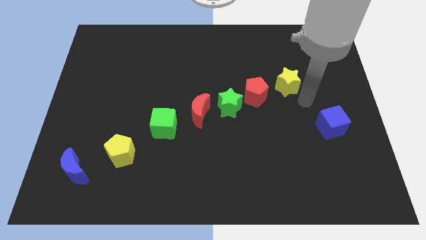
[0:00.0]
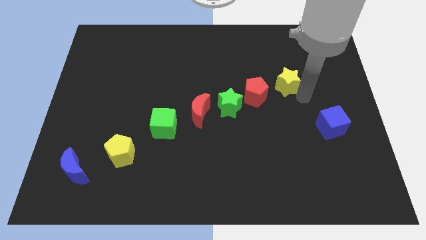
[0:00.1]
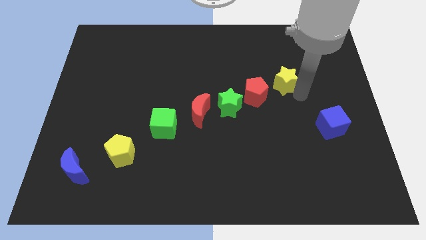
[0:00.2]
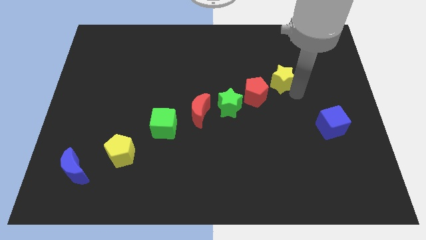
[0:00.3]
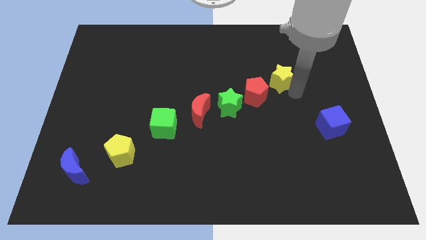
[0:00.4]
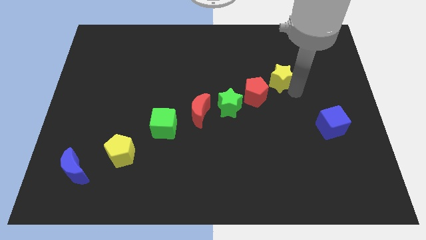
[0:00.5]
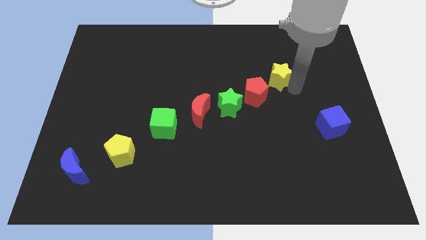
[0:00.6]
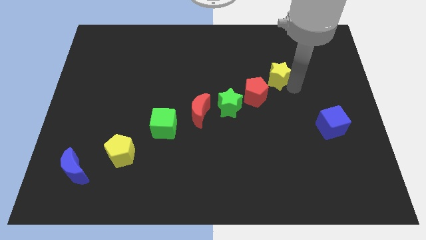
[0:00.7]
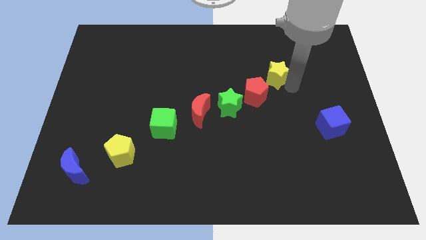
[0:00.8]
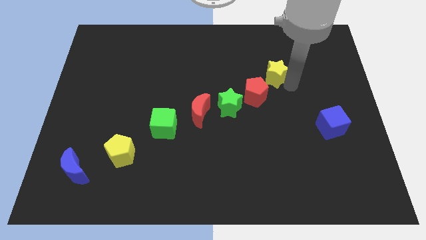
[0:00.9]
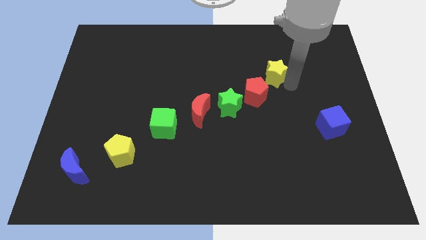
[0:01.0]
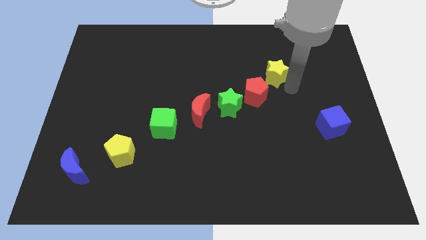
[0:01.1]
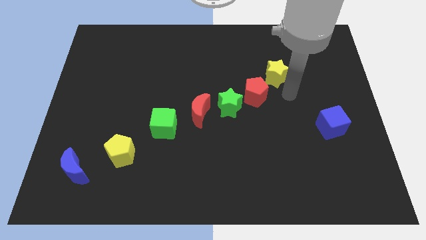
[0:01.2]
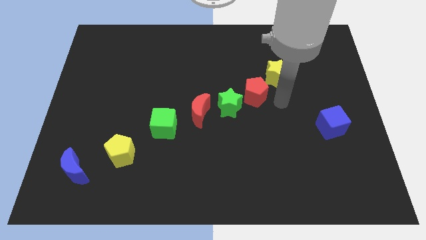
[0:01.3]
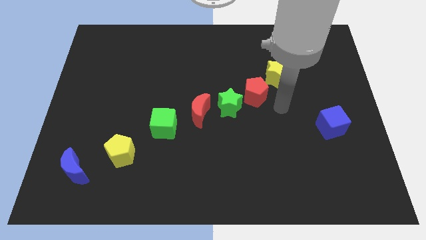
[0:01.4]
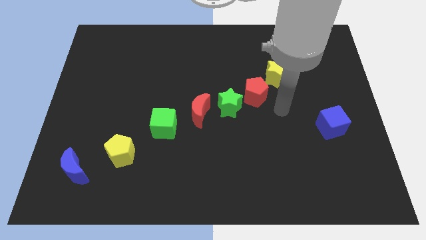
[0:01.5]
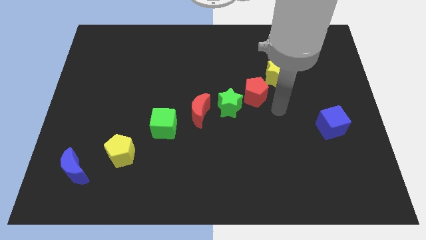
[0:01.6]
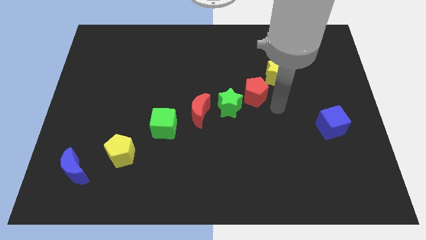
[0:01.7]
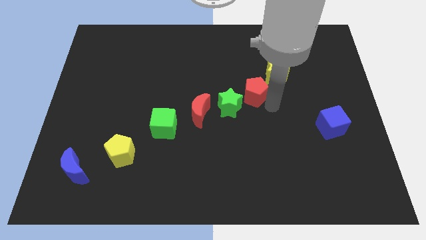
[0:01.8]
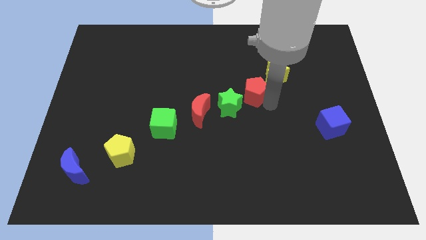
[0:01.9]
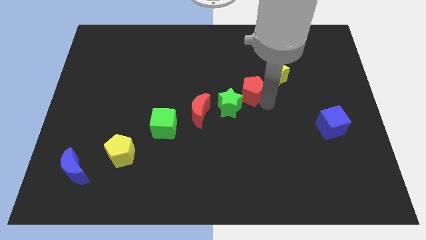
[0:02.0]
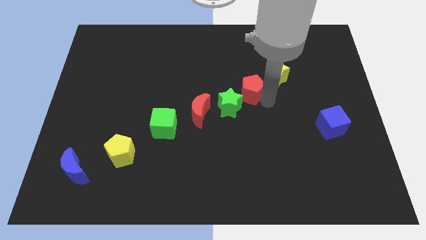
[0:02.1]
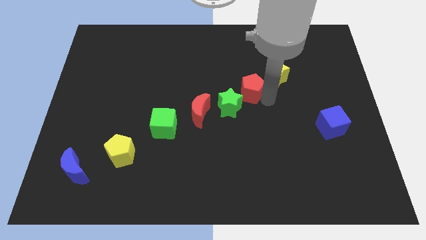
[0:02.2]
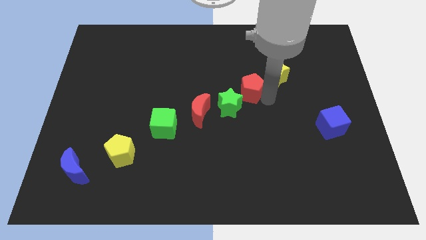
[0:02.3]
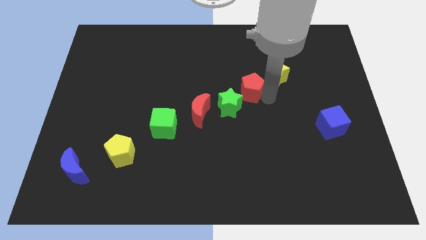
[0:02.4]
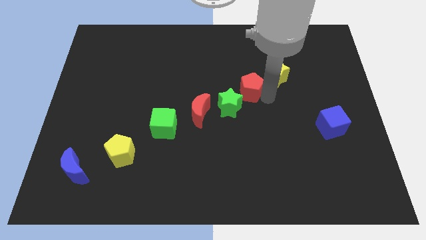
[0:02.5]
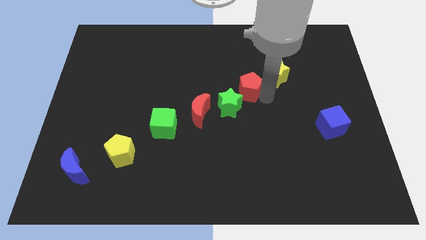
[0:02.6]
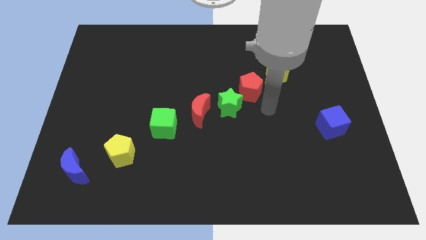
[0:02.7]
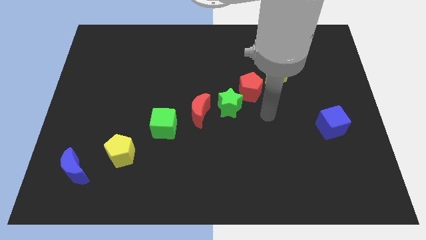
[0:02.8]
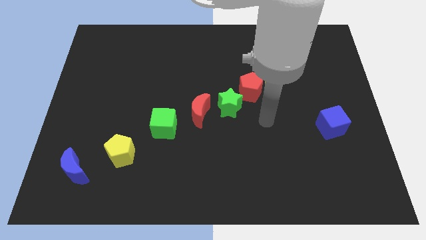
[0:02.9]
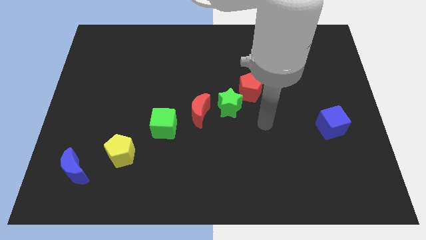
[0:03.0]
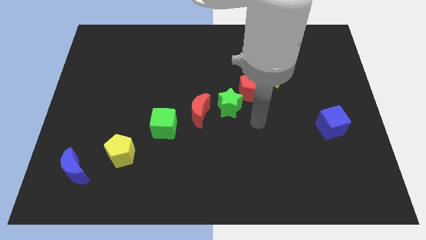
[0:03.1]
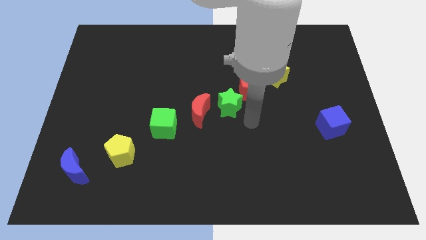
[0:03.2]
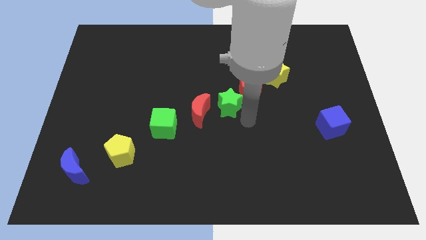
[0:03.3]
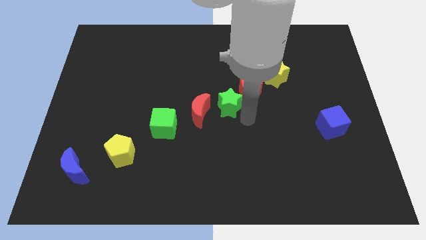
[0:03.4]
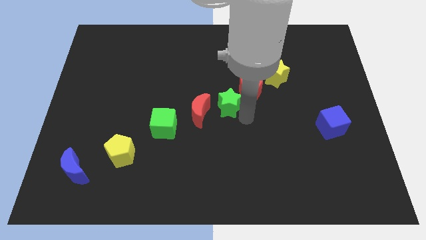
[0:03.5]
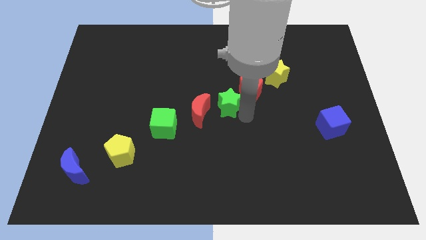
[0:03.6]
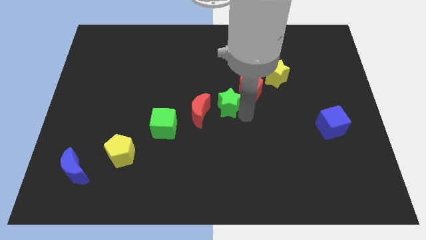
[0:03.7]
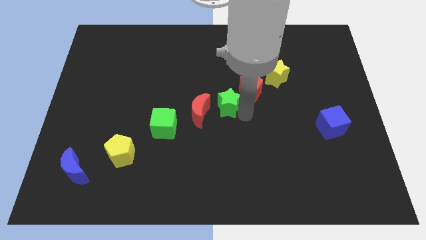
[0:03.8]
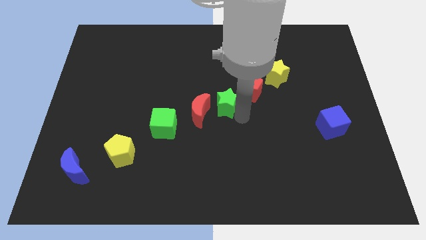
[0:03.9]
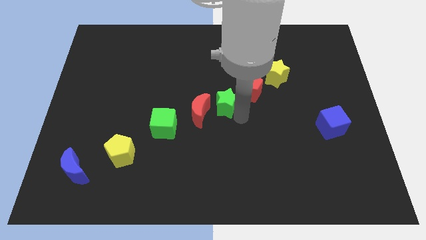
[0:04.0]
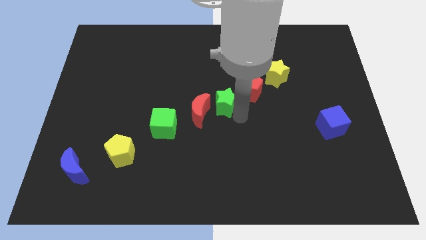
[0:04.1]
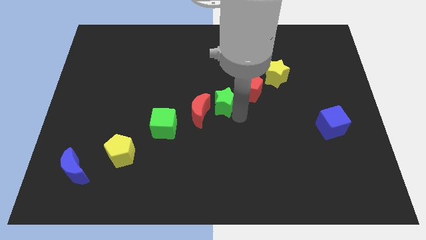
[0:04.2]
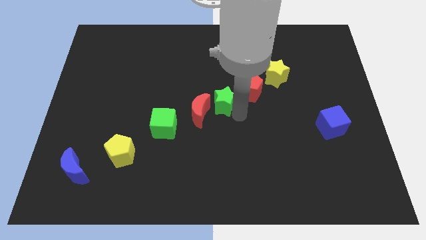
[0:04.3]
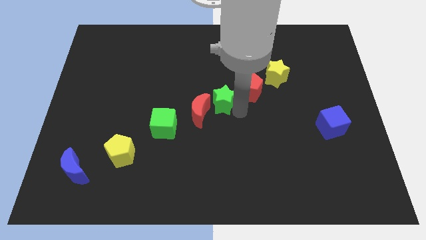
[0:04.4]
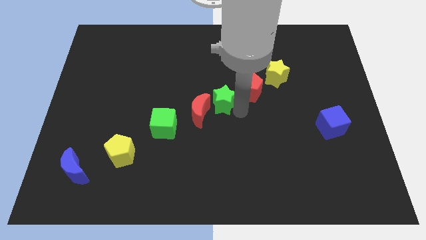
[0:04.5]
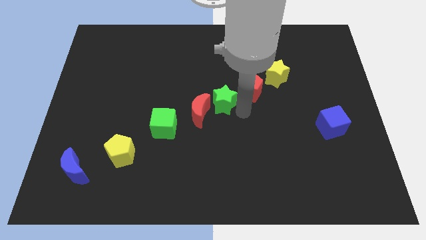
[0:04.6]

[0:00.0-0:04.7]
slightly push the yellow star red pentagon and green star towards up

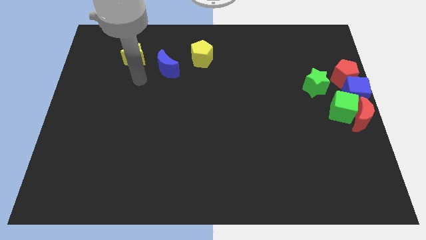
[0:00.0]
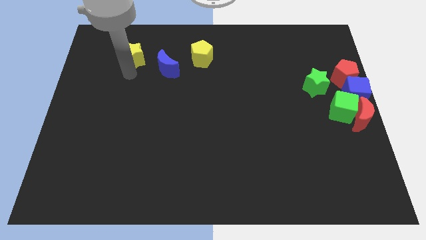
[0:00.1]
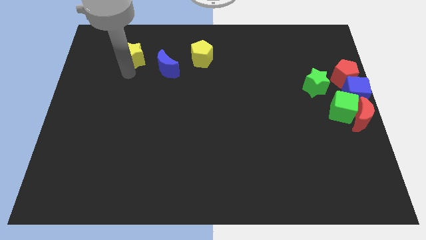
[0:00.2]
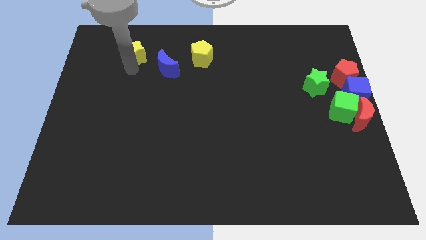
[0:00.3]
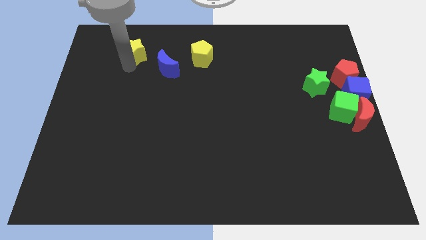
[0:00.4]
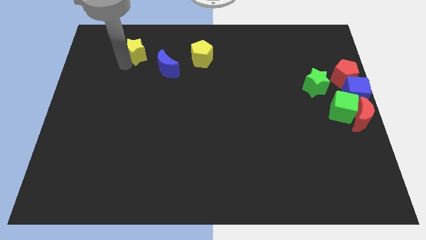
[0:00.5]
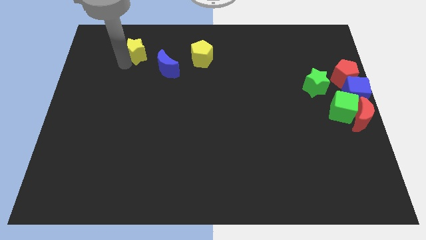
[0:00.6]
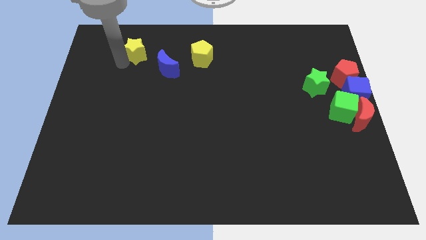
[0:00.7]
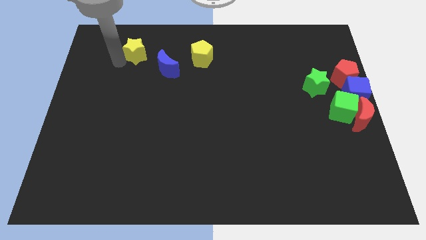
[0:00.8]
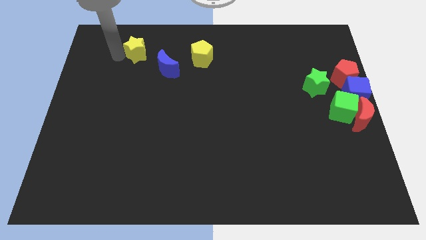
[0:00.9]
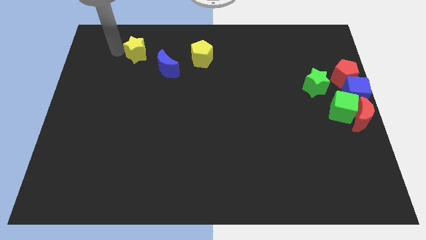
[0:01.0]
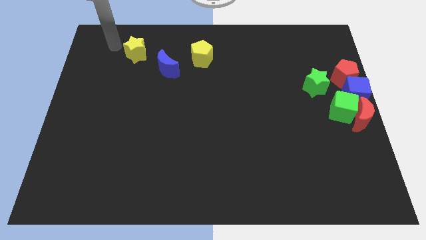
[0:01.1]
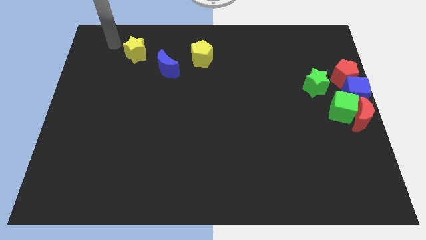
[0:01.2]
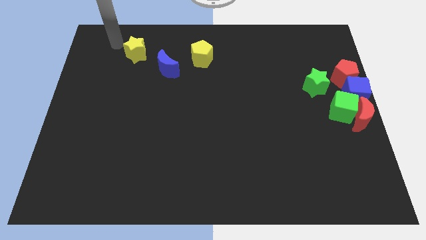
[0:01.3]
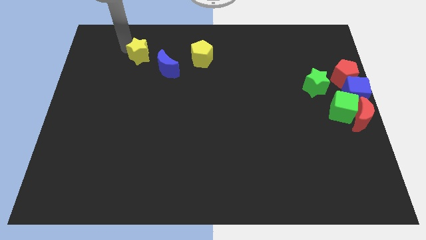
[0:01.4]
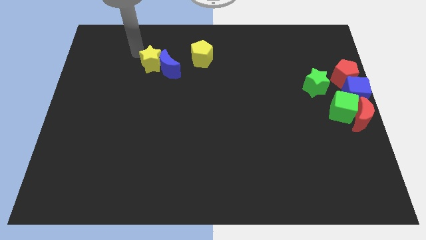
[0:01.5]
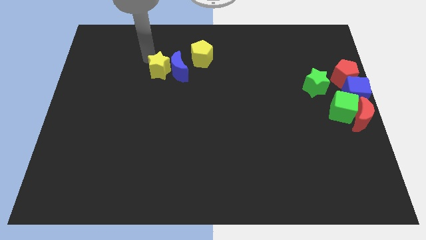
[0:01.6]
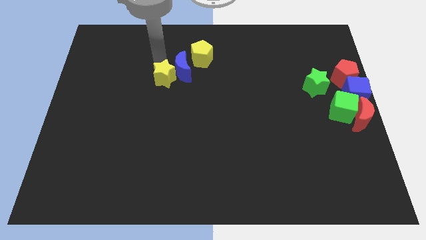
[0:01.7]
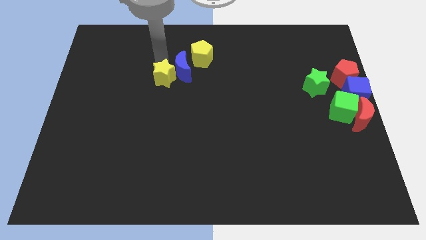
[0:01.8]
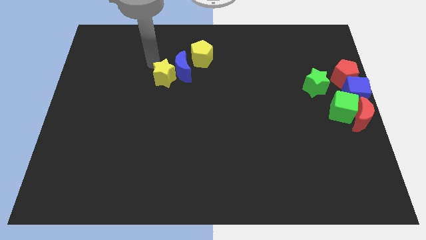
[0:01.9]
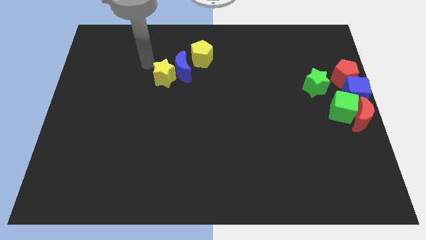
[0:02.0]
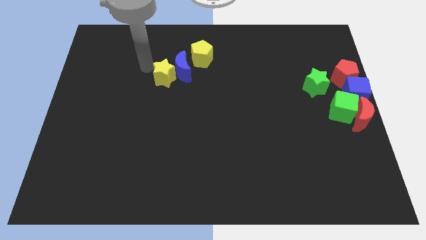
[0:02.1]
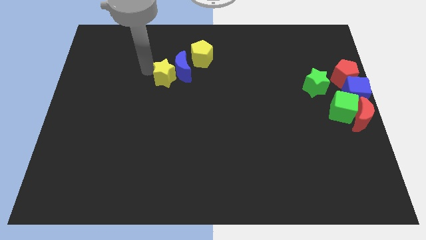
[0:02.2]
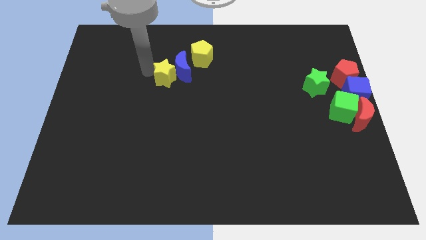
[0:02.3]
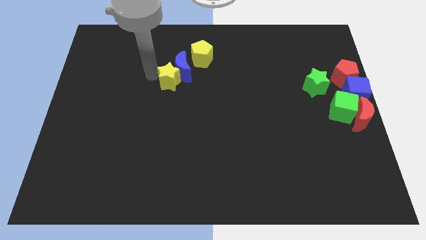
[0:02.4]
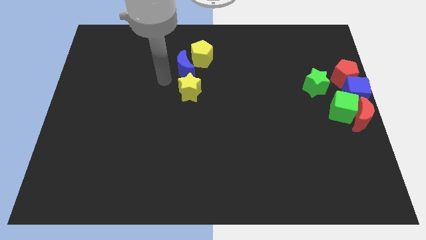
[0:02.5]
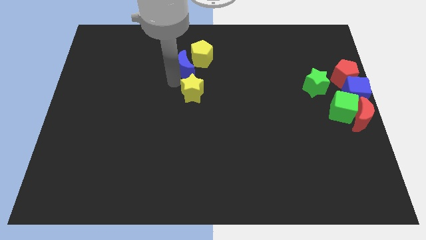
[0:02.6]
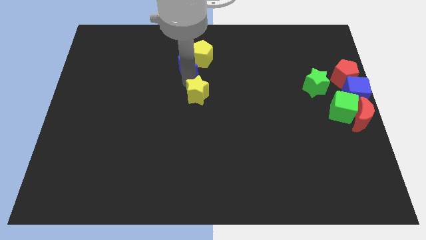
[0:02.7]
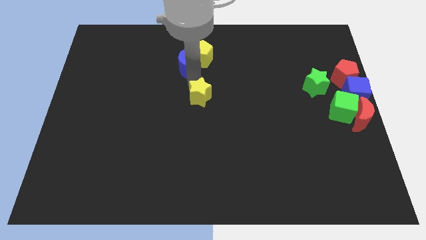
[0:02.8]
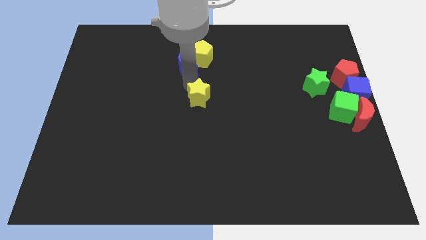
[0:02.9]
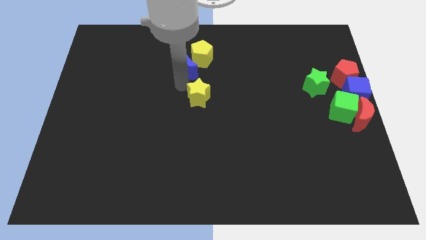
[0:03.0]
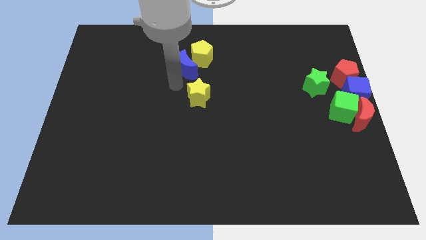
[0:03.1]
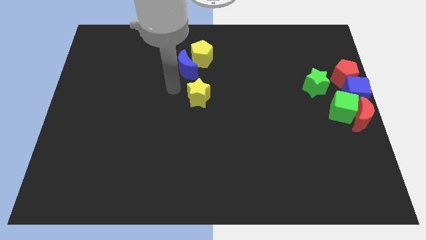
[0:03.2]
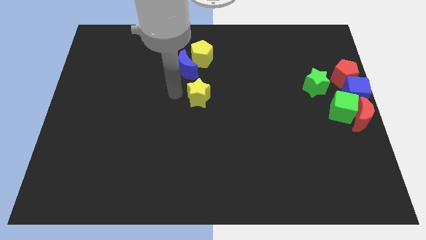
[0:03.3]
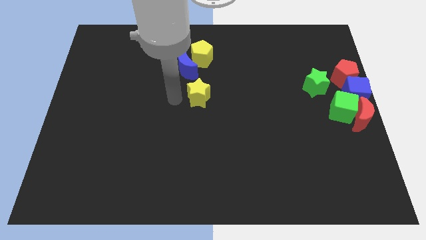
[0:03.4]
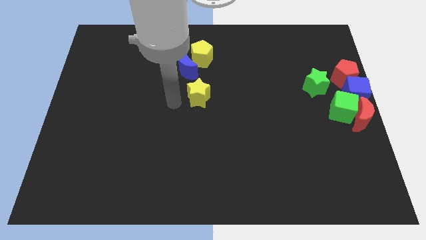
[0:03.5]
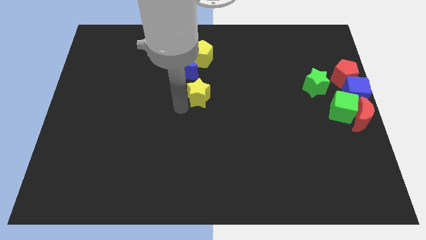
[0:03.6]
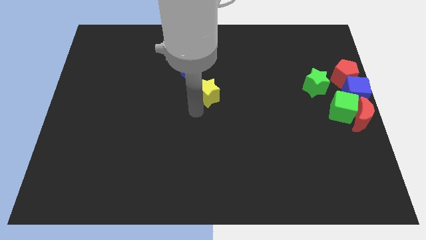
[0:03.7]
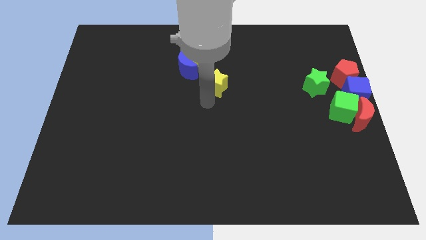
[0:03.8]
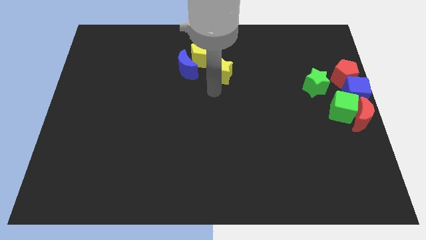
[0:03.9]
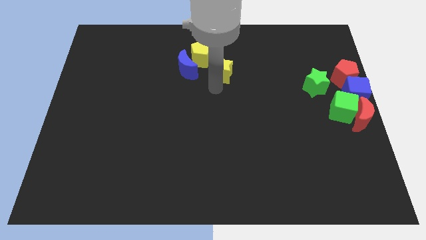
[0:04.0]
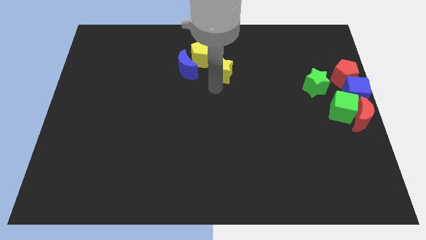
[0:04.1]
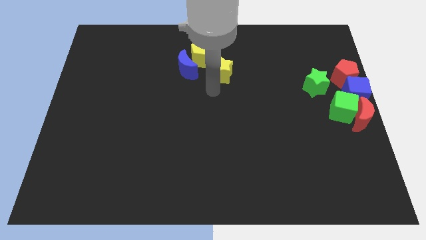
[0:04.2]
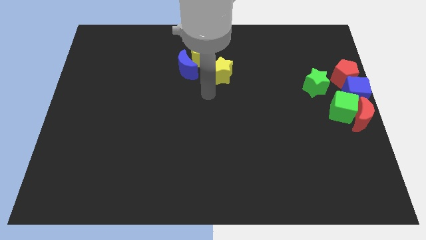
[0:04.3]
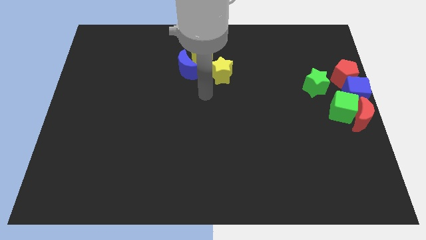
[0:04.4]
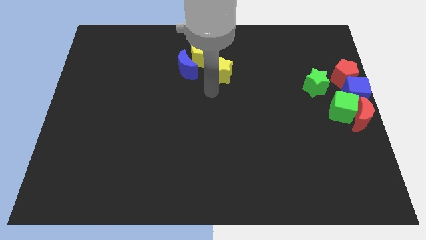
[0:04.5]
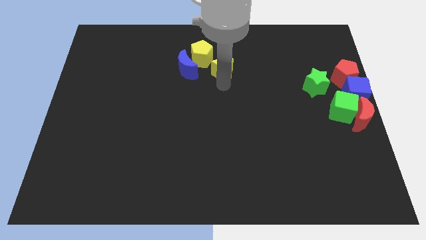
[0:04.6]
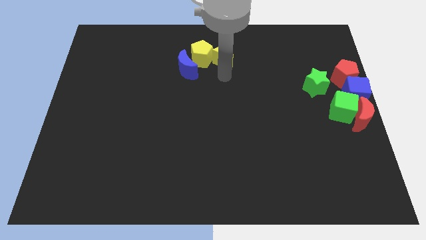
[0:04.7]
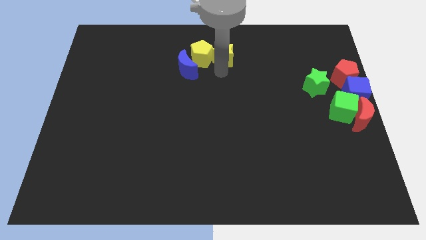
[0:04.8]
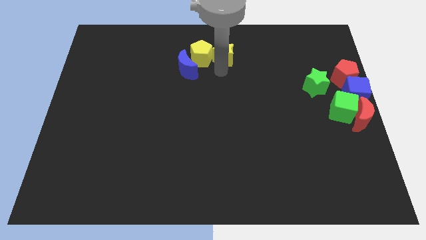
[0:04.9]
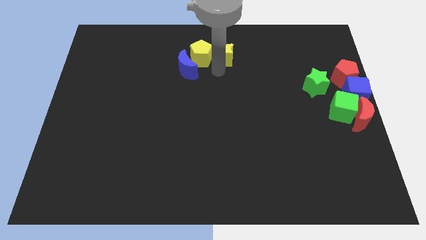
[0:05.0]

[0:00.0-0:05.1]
place the yellow star to the right of yellow pentagon
